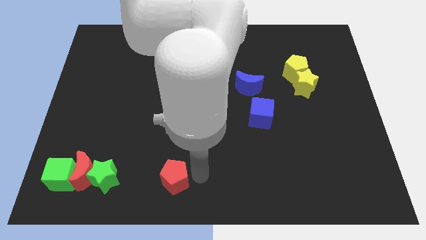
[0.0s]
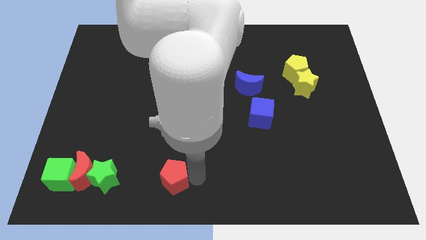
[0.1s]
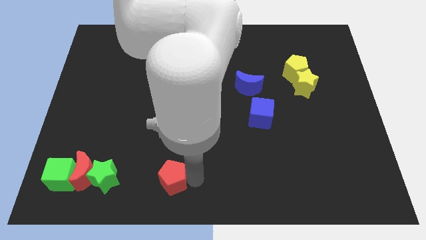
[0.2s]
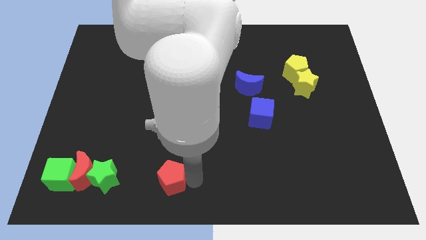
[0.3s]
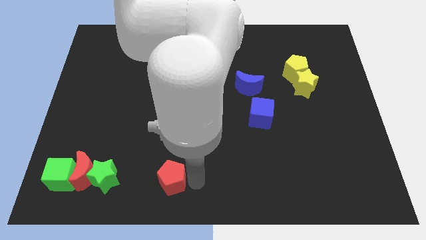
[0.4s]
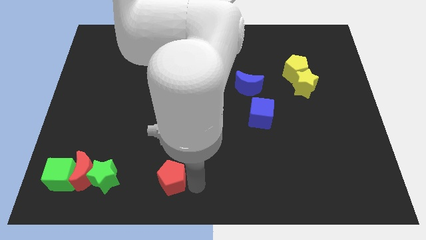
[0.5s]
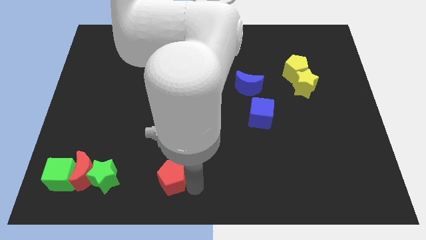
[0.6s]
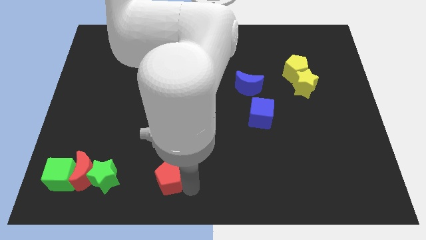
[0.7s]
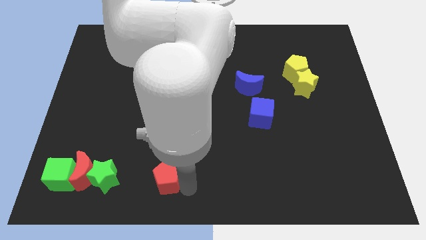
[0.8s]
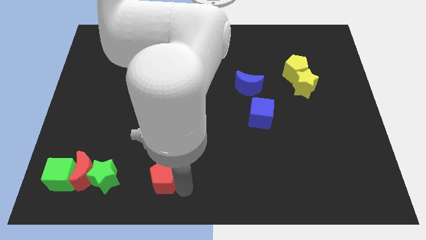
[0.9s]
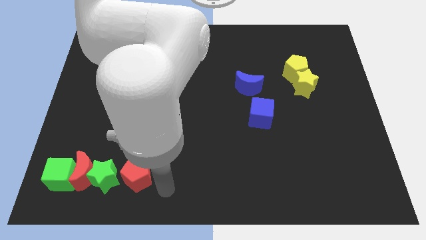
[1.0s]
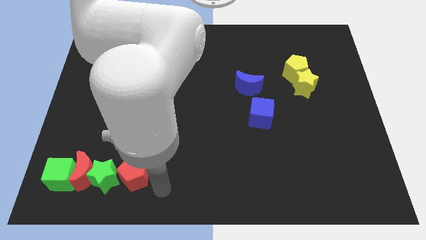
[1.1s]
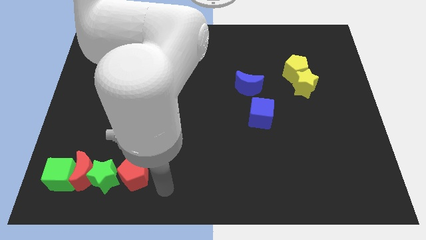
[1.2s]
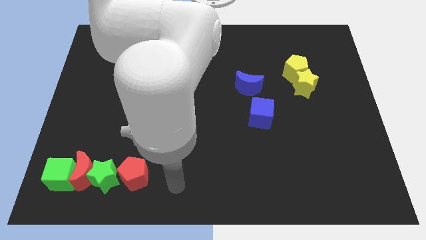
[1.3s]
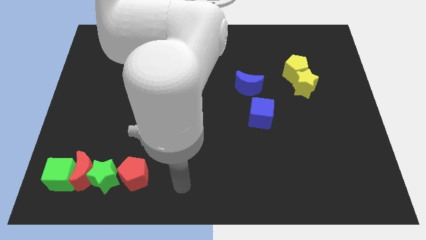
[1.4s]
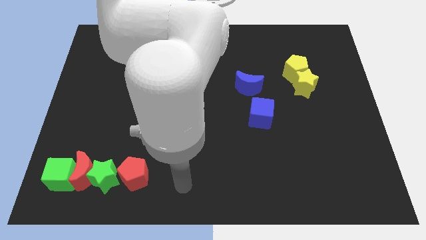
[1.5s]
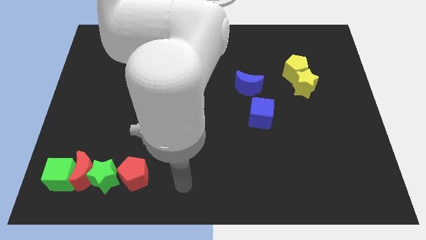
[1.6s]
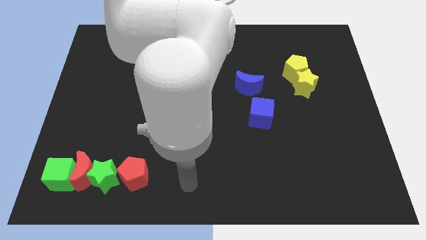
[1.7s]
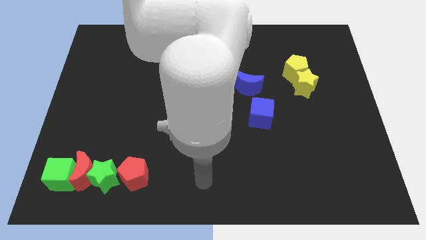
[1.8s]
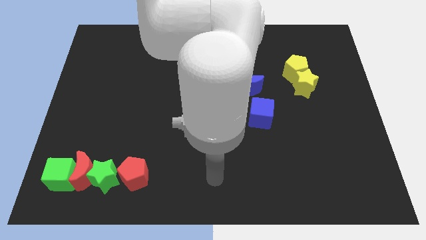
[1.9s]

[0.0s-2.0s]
push the red pentagon to the right of the green star

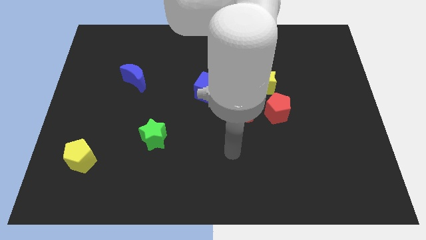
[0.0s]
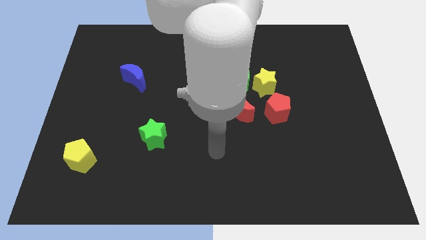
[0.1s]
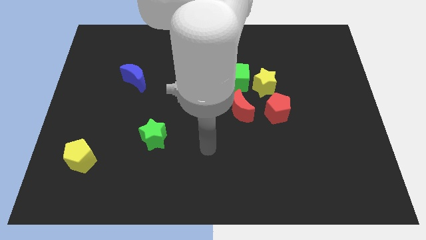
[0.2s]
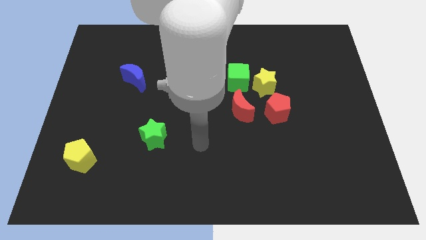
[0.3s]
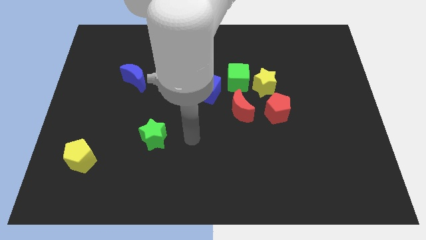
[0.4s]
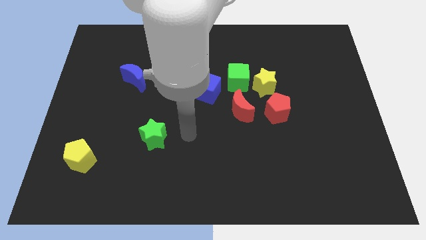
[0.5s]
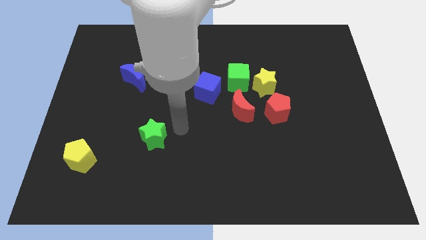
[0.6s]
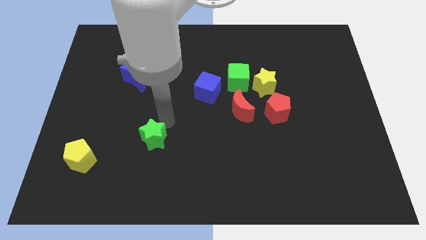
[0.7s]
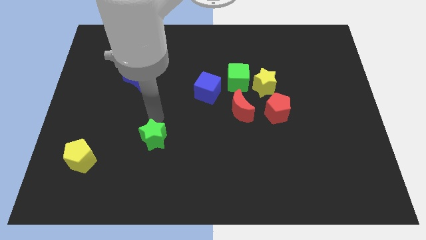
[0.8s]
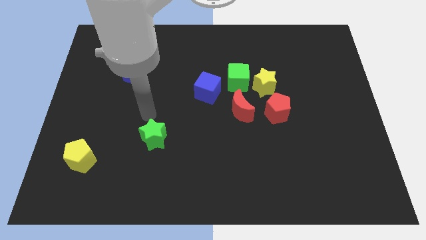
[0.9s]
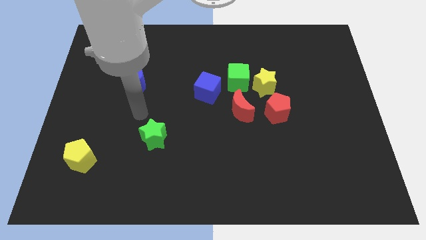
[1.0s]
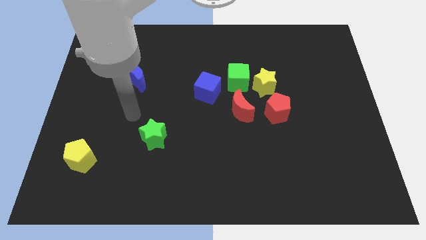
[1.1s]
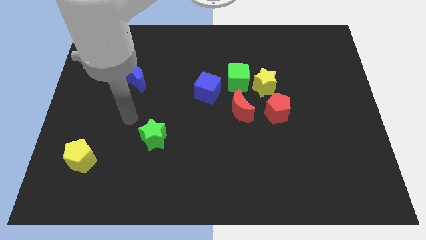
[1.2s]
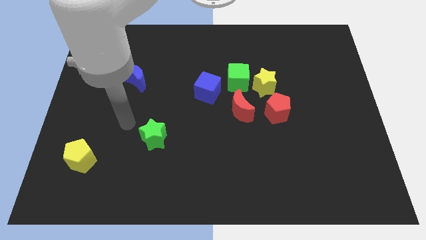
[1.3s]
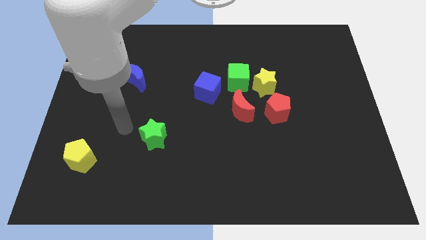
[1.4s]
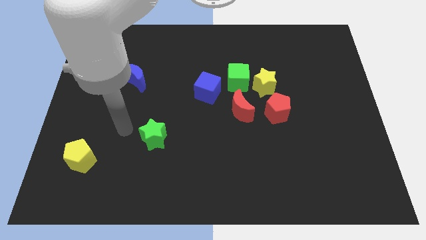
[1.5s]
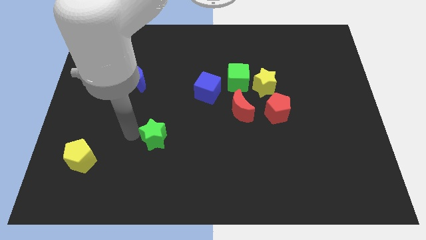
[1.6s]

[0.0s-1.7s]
move your arm towards the green star

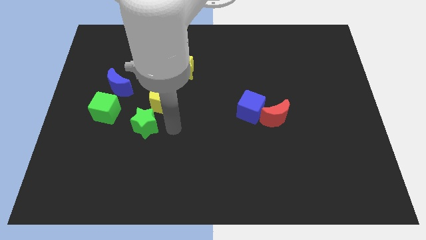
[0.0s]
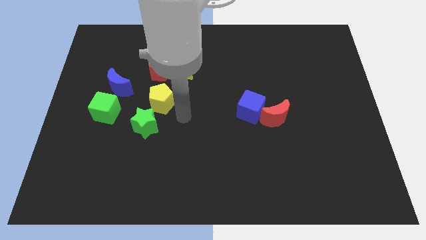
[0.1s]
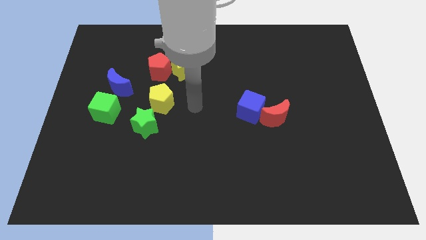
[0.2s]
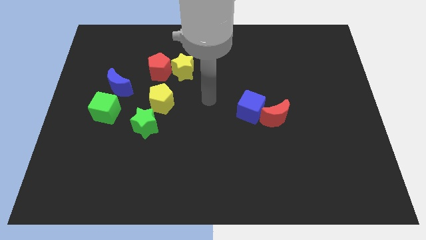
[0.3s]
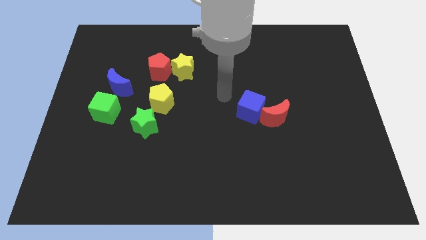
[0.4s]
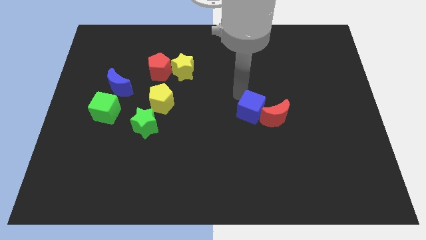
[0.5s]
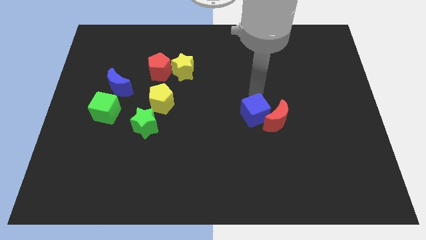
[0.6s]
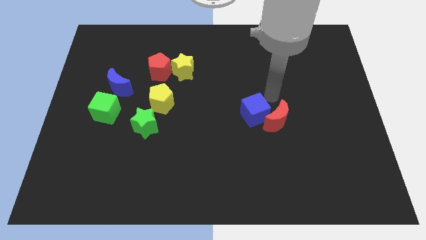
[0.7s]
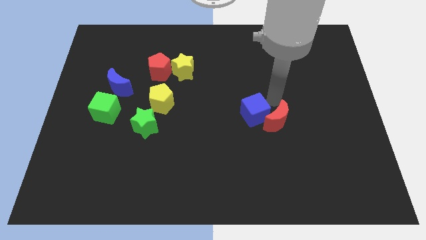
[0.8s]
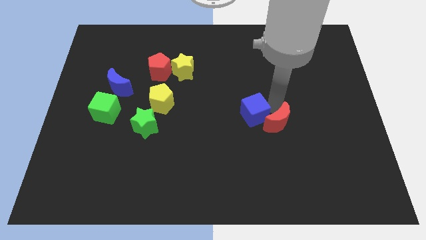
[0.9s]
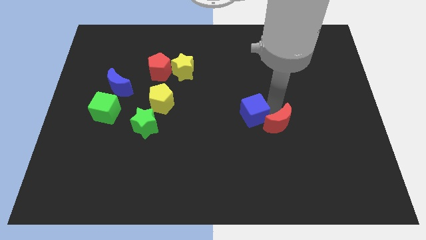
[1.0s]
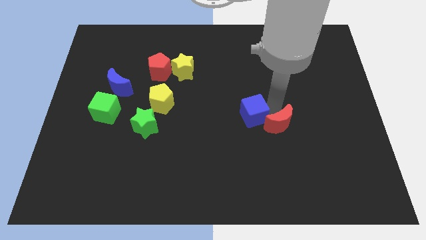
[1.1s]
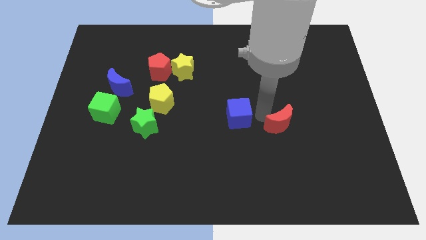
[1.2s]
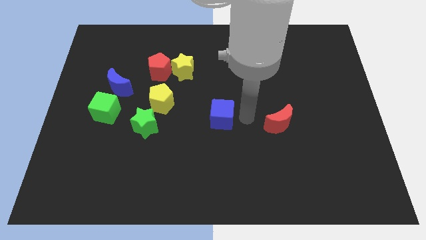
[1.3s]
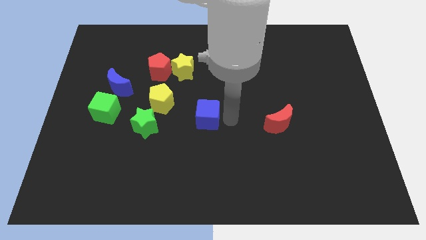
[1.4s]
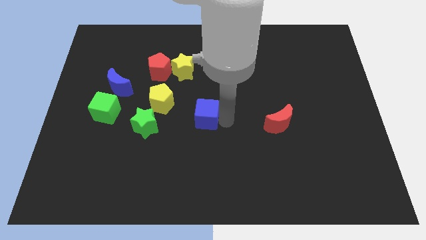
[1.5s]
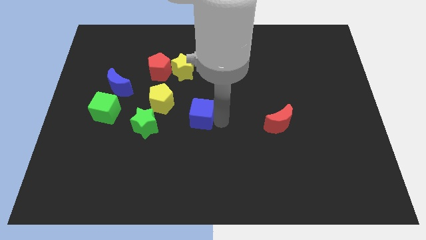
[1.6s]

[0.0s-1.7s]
separate the blue cube from the red moon

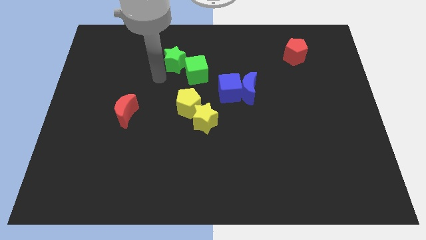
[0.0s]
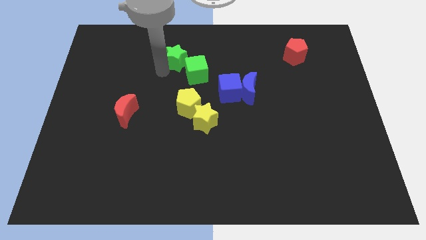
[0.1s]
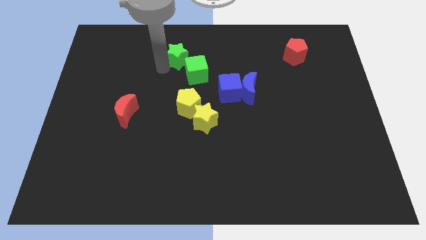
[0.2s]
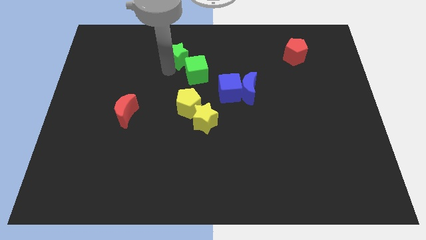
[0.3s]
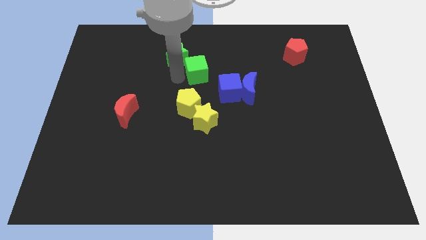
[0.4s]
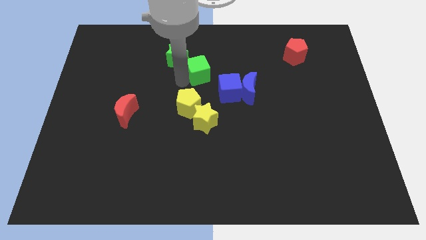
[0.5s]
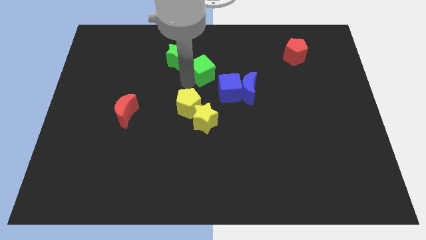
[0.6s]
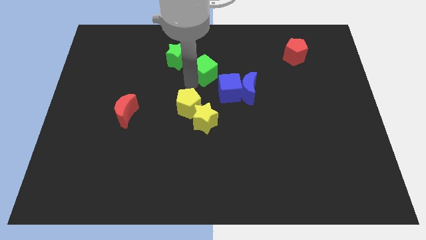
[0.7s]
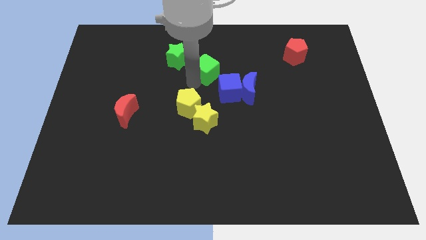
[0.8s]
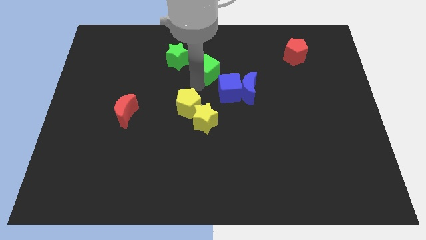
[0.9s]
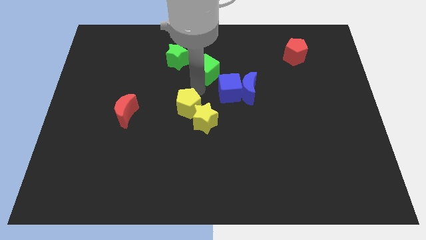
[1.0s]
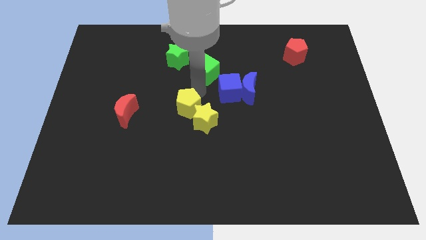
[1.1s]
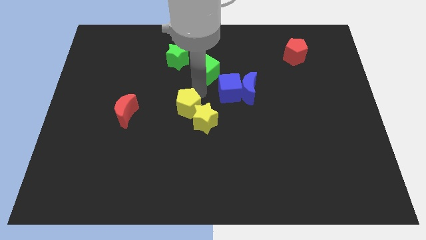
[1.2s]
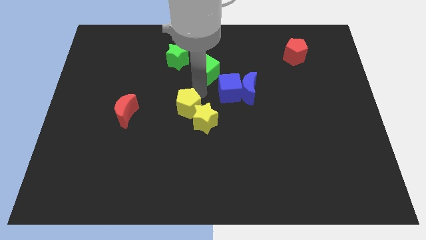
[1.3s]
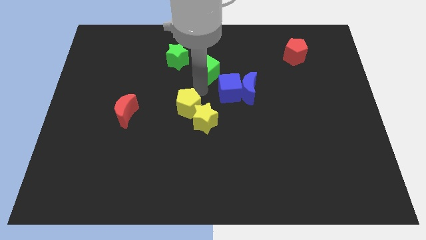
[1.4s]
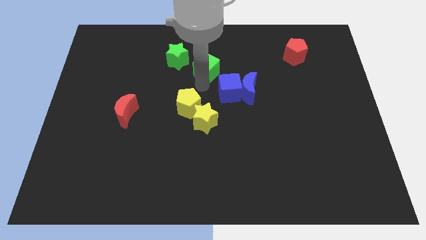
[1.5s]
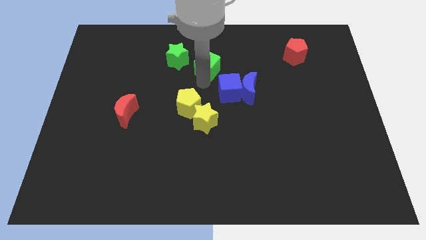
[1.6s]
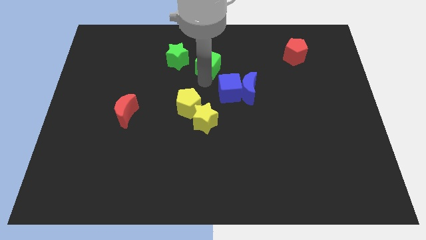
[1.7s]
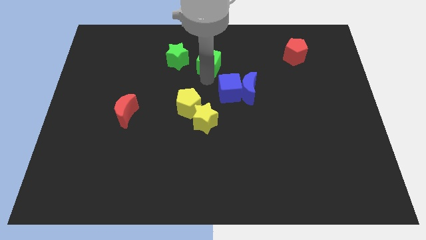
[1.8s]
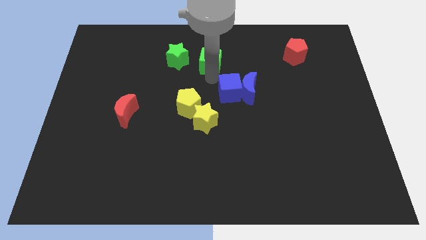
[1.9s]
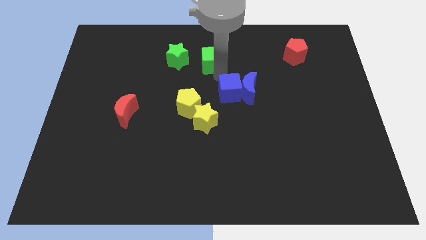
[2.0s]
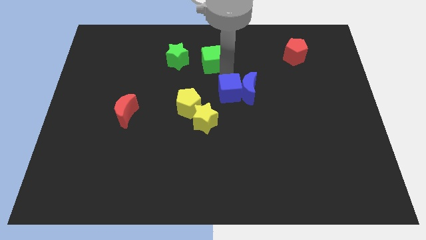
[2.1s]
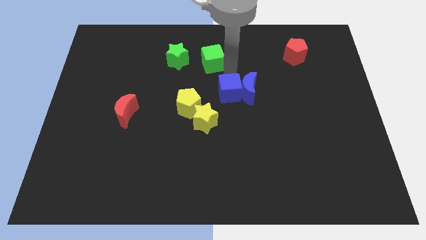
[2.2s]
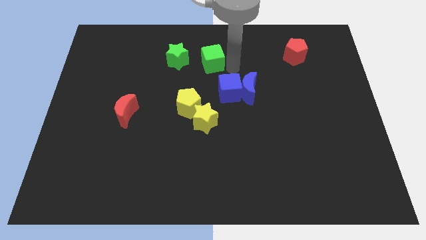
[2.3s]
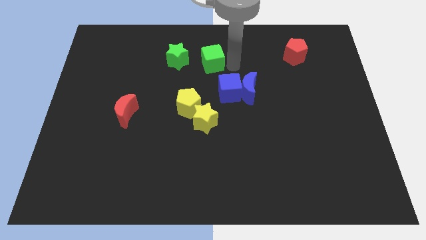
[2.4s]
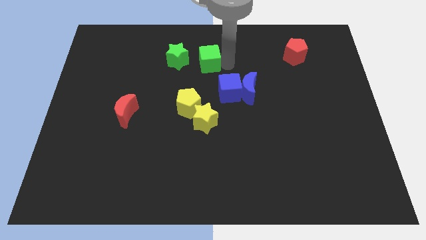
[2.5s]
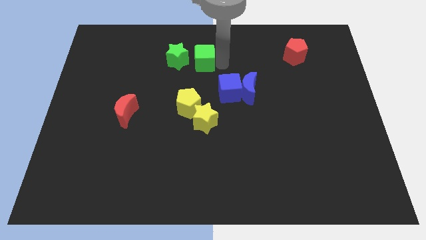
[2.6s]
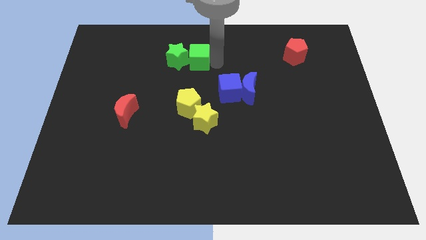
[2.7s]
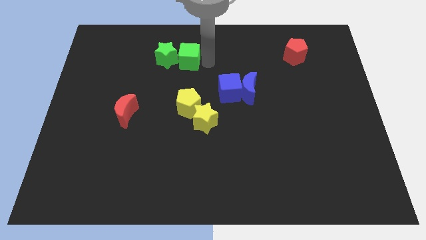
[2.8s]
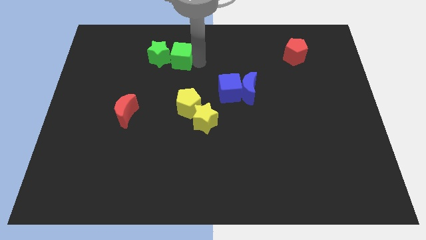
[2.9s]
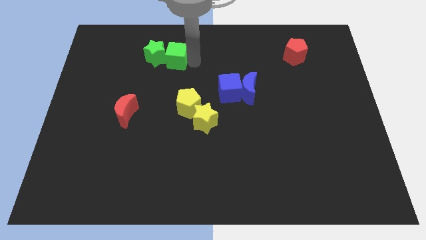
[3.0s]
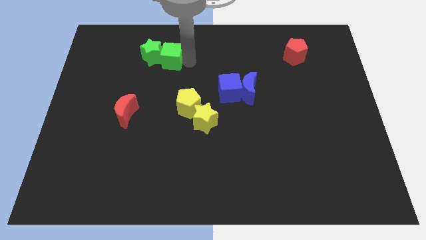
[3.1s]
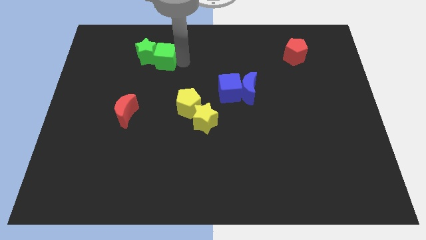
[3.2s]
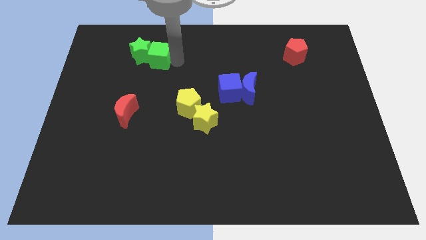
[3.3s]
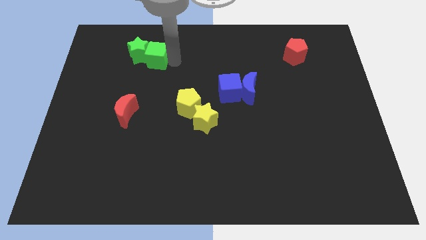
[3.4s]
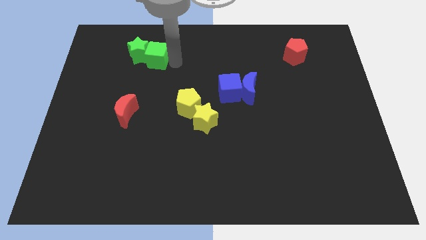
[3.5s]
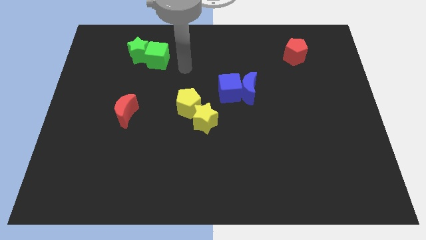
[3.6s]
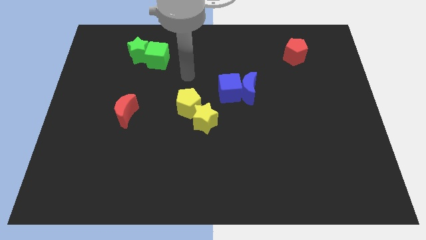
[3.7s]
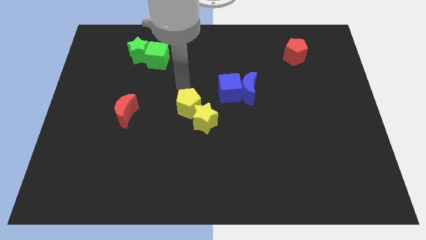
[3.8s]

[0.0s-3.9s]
push the green cube into the green star
